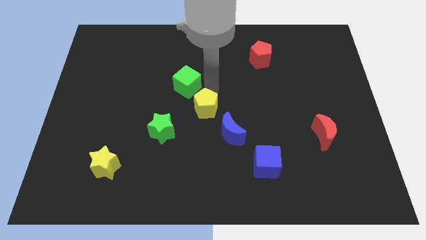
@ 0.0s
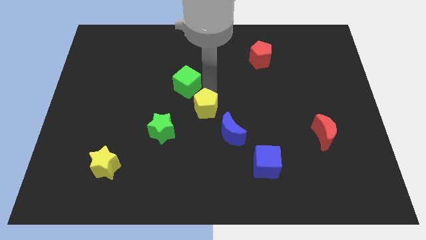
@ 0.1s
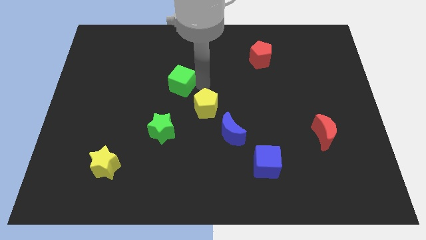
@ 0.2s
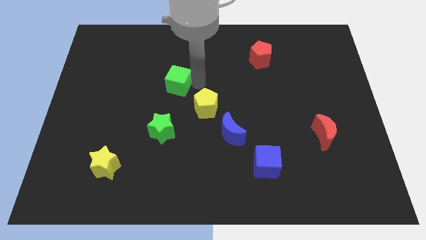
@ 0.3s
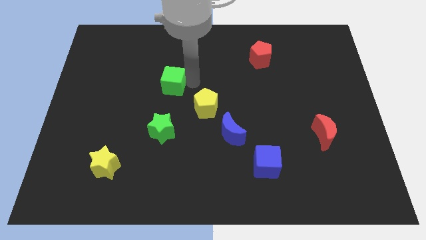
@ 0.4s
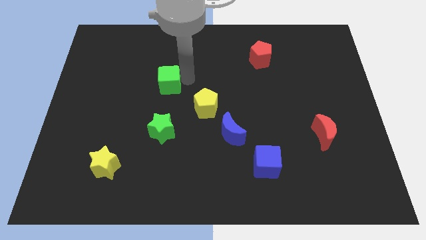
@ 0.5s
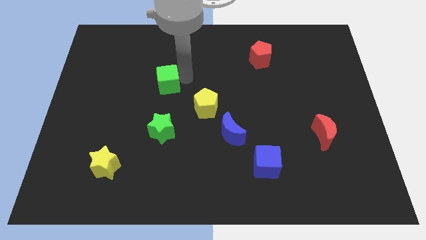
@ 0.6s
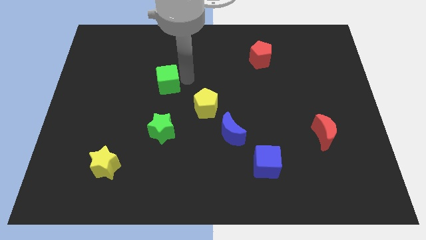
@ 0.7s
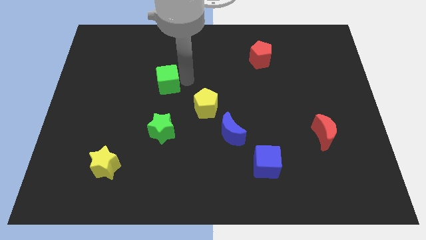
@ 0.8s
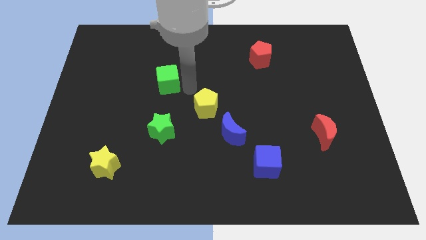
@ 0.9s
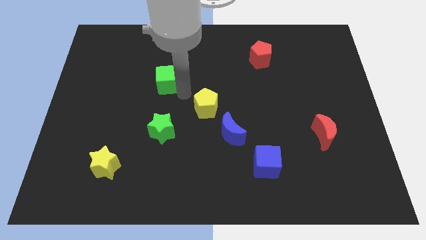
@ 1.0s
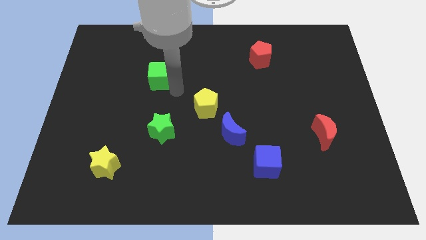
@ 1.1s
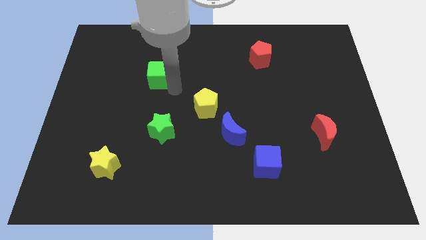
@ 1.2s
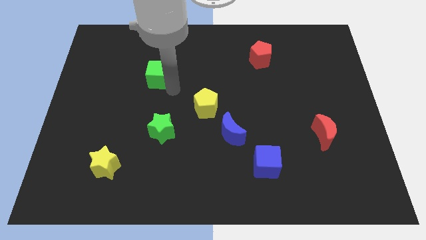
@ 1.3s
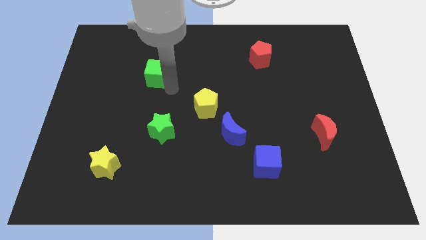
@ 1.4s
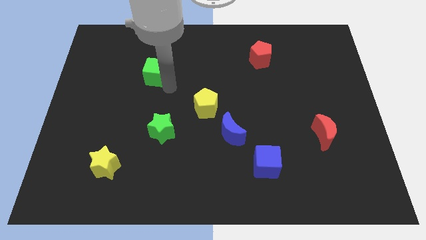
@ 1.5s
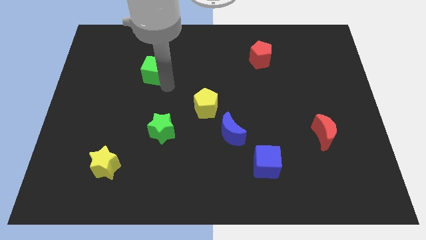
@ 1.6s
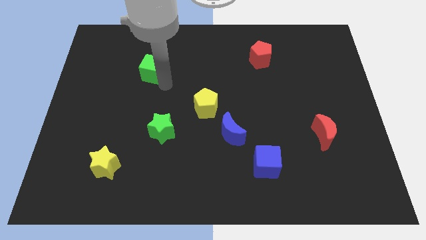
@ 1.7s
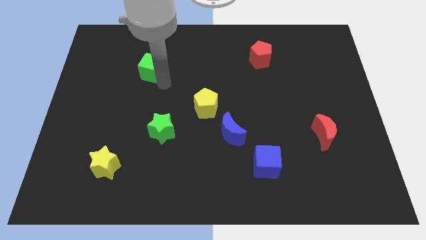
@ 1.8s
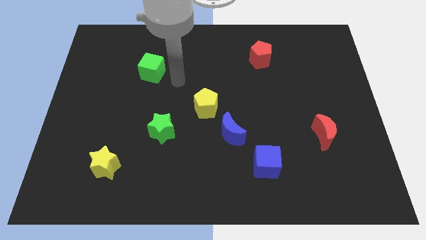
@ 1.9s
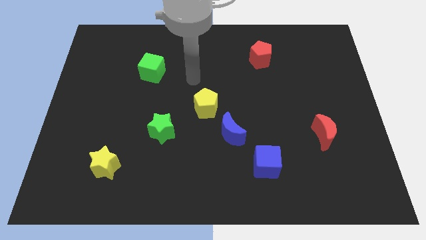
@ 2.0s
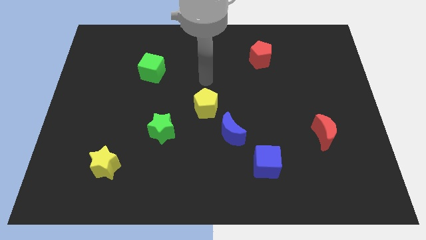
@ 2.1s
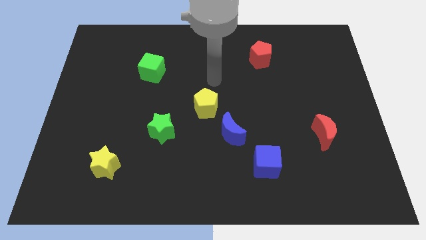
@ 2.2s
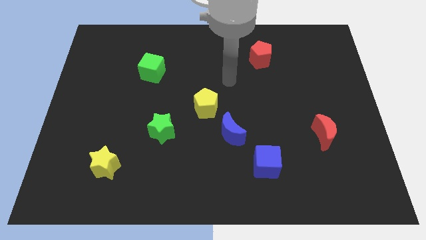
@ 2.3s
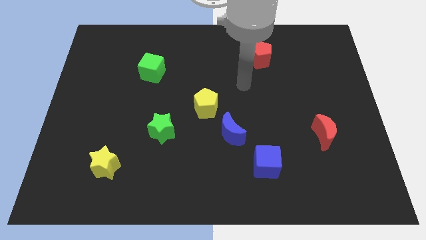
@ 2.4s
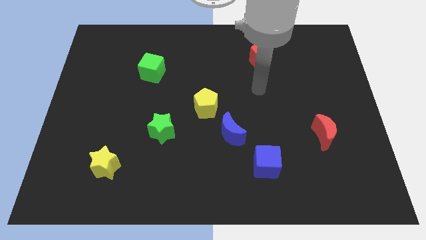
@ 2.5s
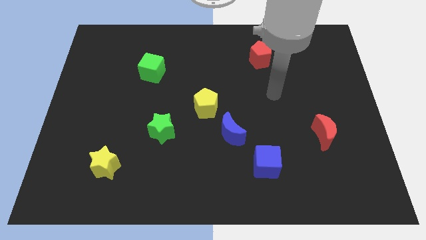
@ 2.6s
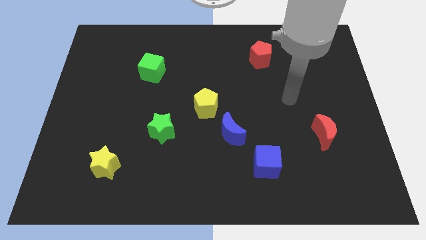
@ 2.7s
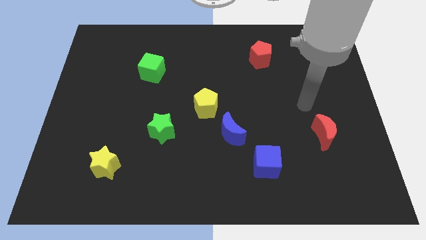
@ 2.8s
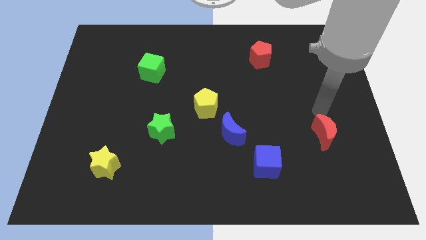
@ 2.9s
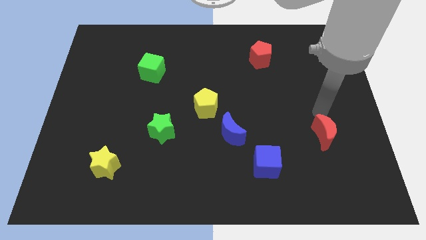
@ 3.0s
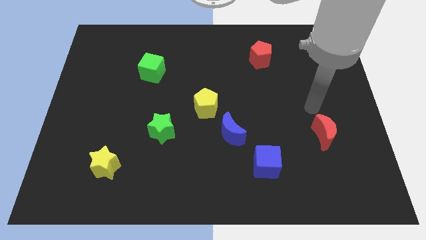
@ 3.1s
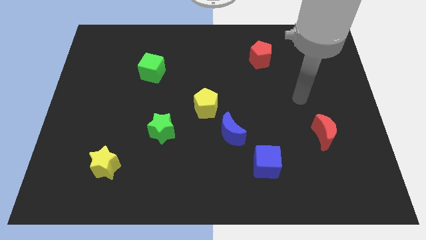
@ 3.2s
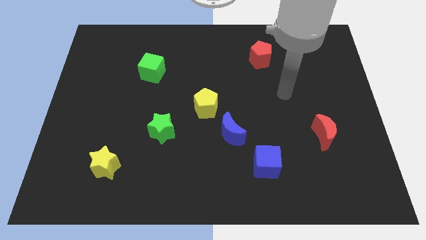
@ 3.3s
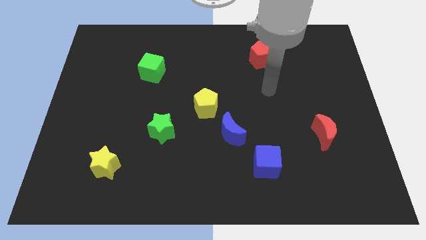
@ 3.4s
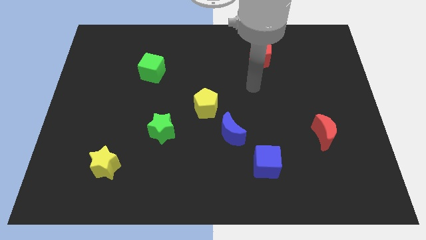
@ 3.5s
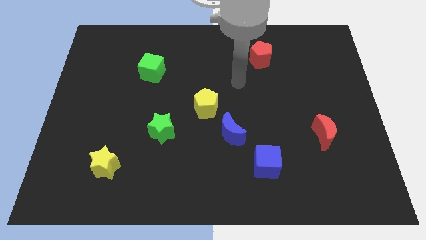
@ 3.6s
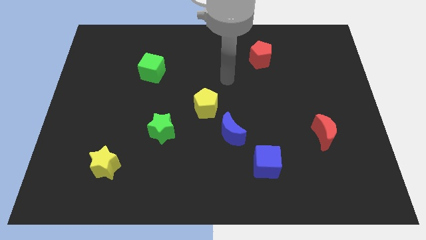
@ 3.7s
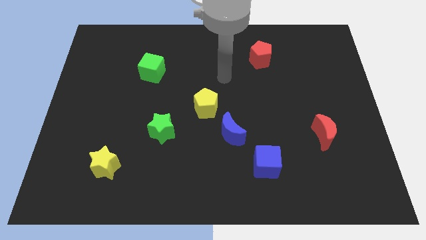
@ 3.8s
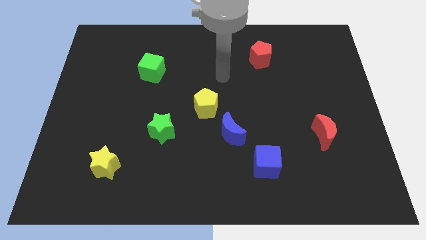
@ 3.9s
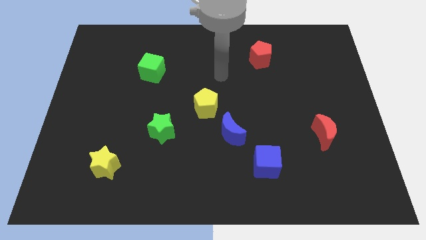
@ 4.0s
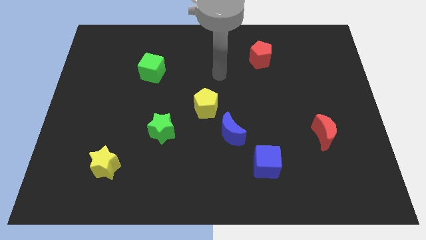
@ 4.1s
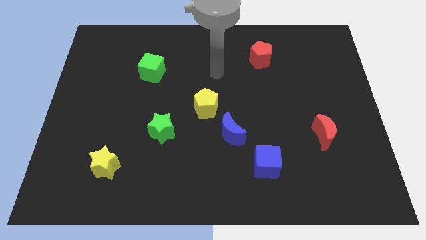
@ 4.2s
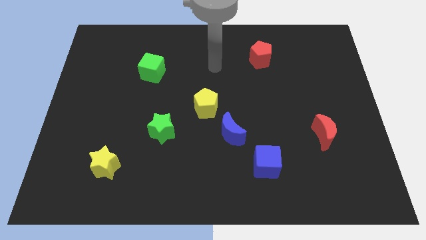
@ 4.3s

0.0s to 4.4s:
push the green cube towards the top left corner of the board

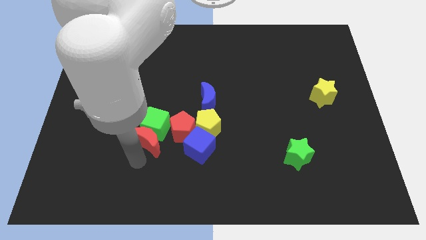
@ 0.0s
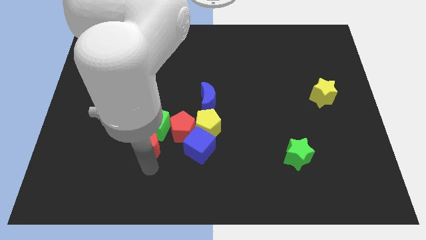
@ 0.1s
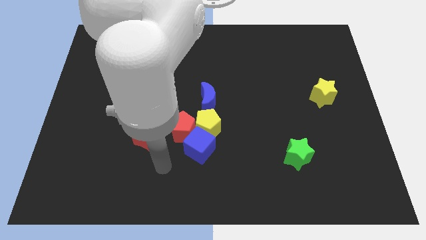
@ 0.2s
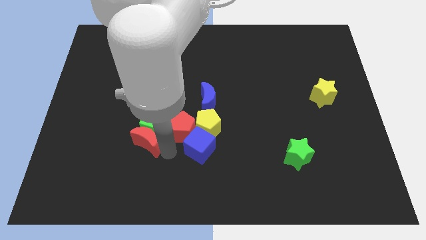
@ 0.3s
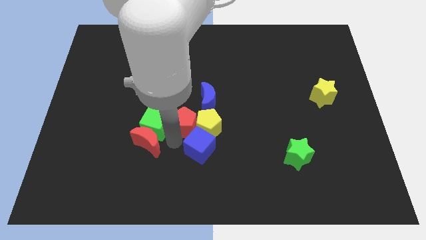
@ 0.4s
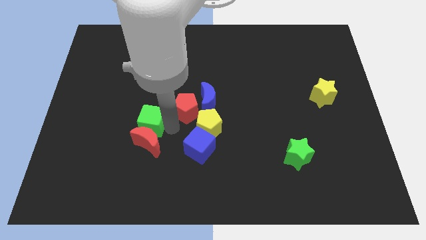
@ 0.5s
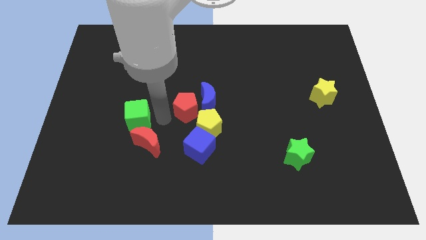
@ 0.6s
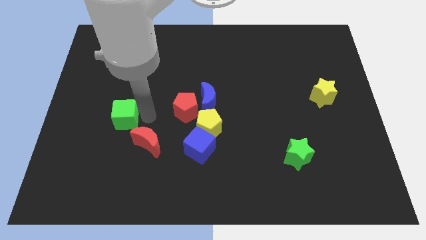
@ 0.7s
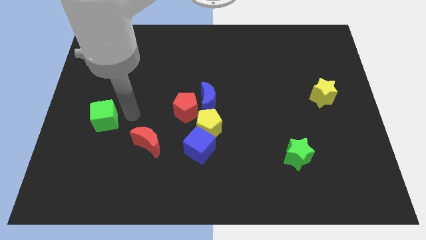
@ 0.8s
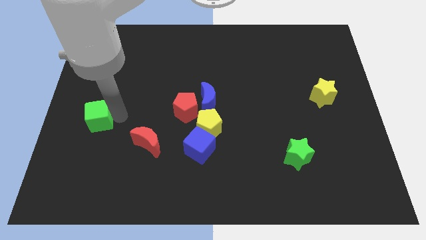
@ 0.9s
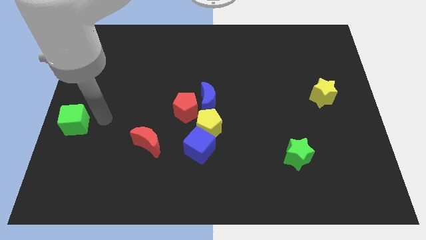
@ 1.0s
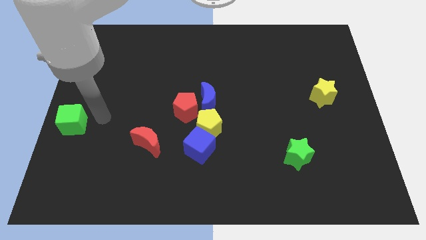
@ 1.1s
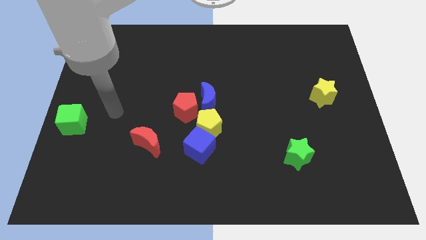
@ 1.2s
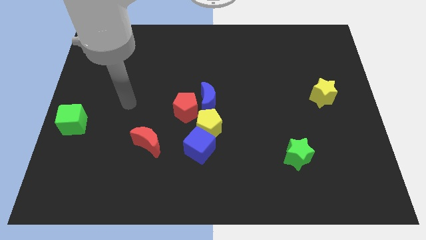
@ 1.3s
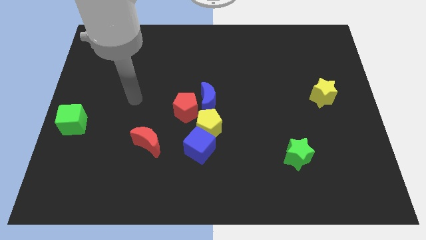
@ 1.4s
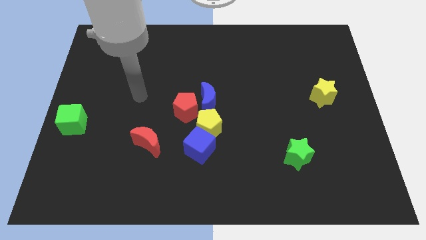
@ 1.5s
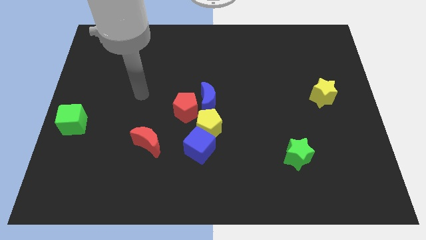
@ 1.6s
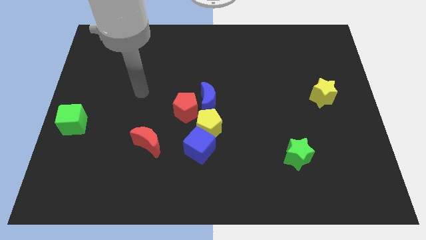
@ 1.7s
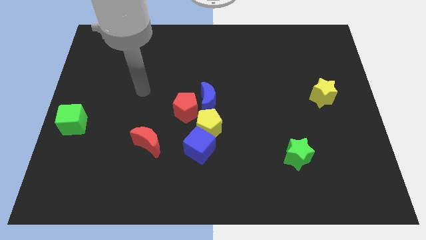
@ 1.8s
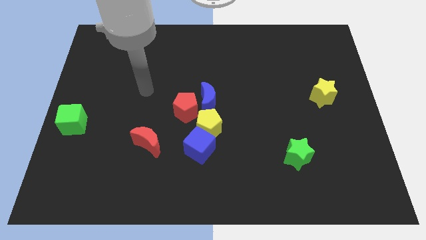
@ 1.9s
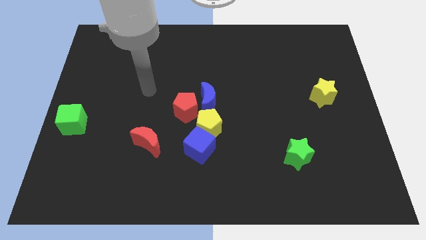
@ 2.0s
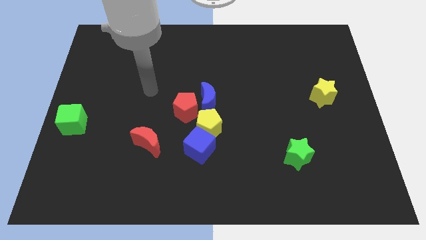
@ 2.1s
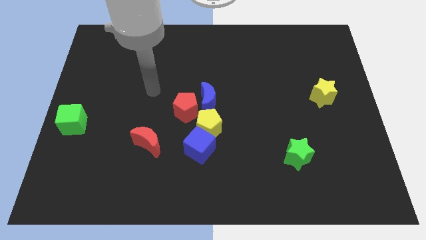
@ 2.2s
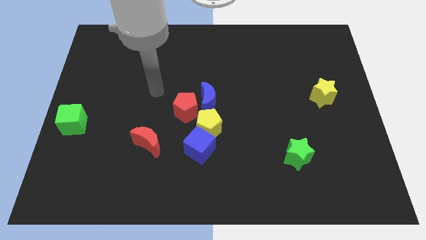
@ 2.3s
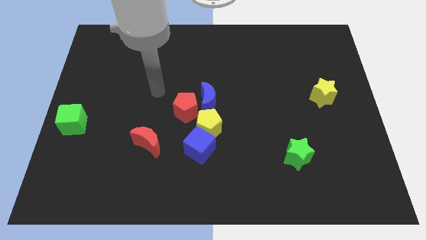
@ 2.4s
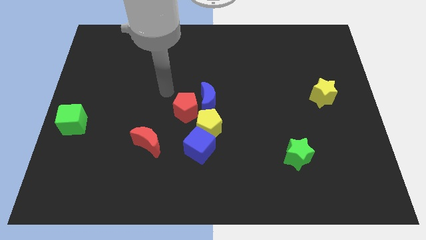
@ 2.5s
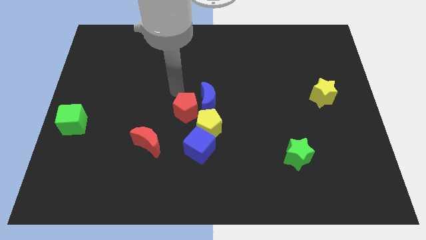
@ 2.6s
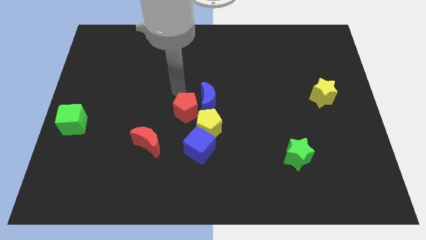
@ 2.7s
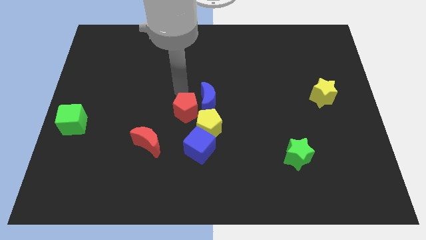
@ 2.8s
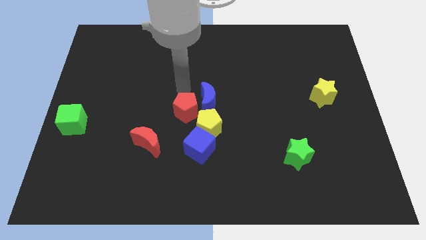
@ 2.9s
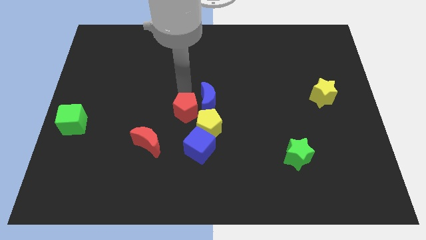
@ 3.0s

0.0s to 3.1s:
separate red pentagon and and green cube from each other

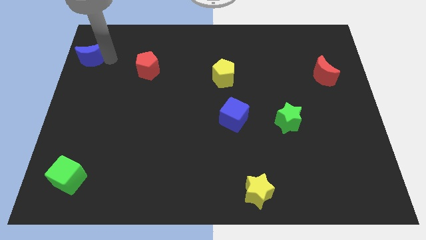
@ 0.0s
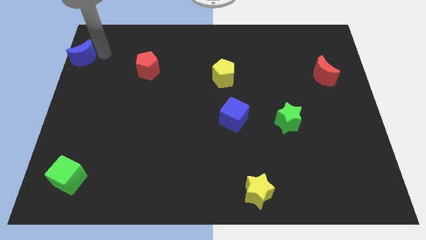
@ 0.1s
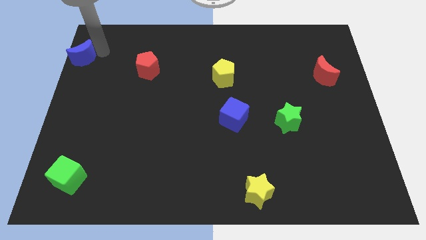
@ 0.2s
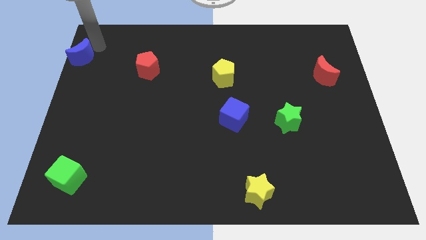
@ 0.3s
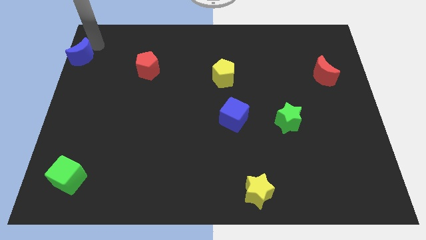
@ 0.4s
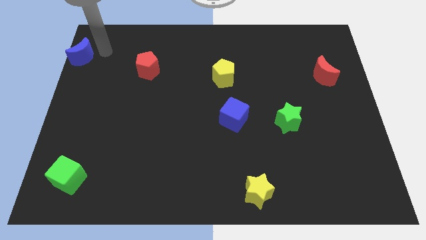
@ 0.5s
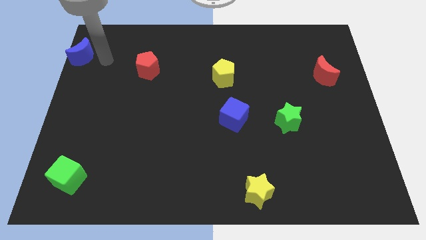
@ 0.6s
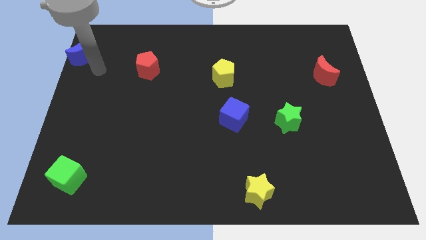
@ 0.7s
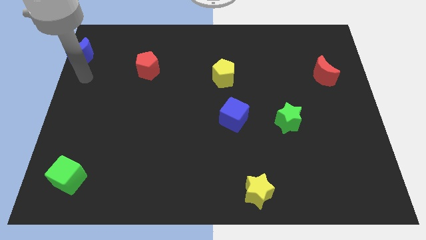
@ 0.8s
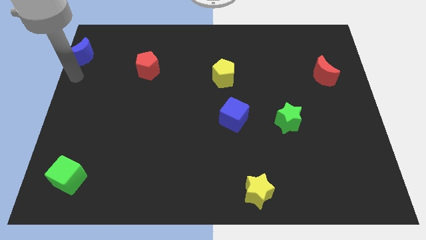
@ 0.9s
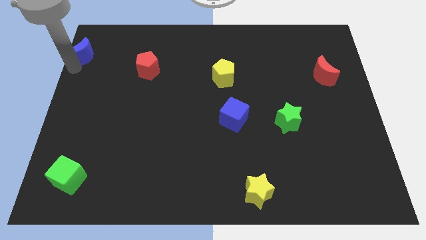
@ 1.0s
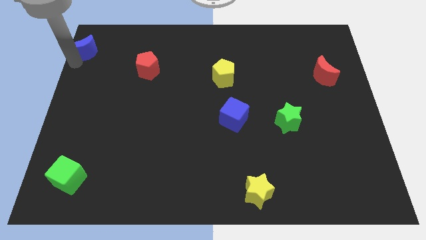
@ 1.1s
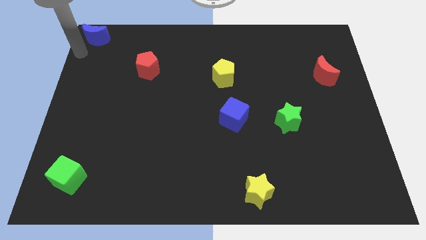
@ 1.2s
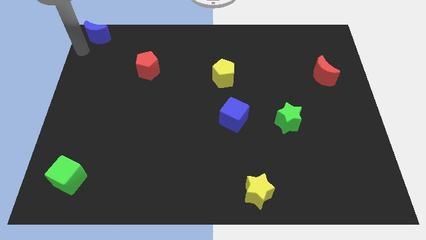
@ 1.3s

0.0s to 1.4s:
place the blue crescent at the top left of the red pentagon
